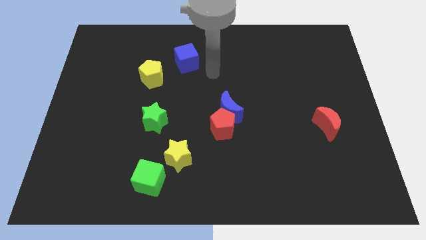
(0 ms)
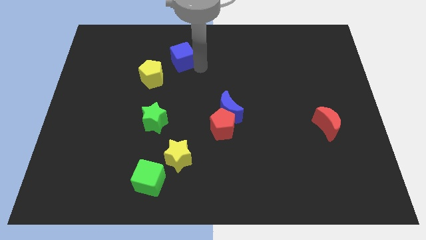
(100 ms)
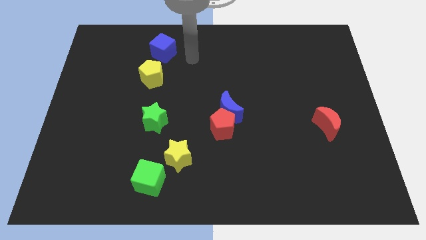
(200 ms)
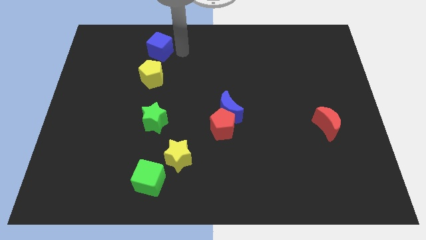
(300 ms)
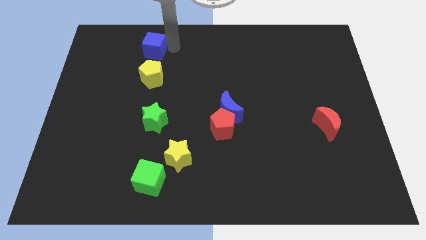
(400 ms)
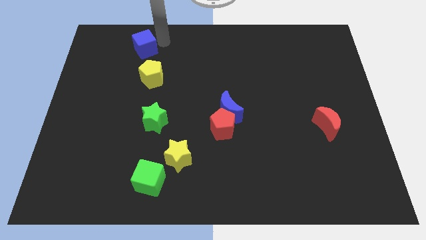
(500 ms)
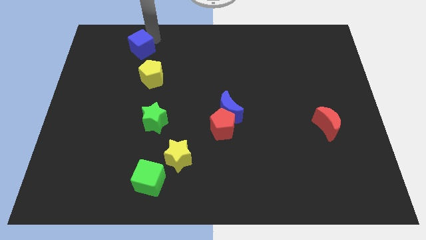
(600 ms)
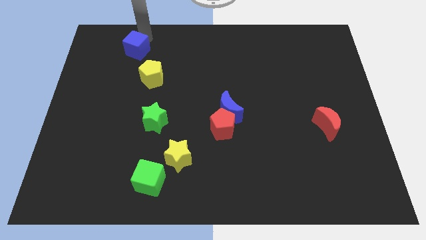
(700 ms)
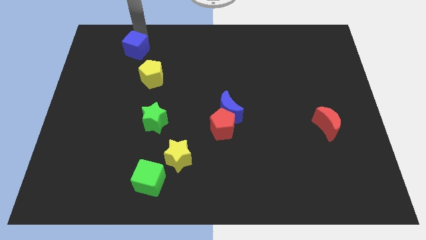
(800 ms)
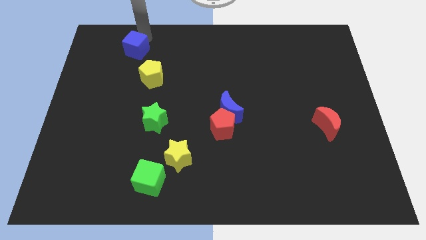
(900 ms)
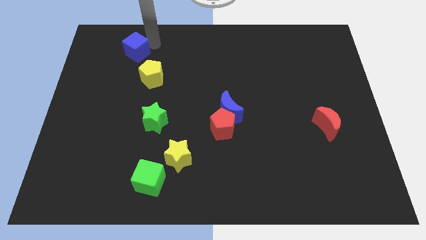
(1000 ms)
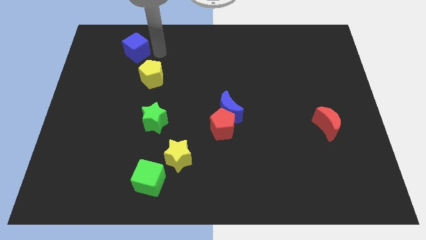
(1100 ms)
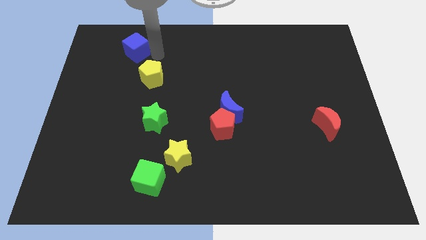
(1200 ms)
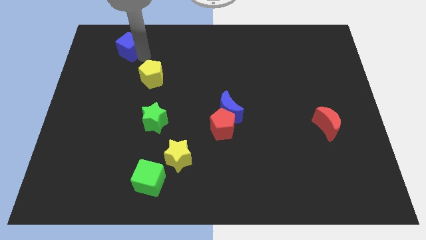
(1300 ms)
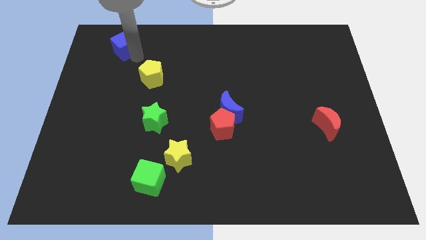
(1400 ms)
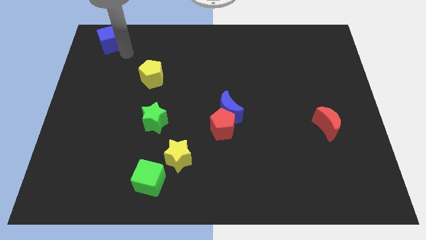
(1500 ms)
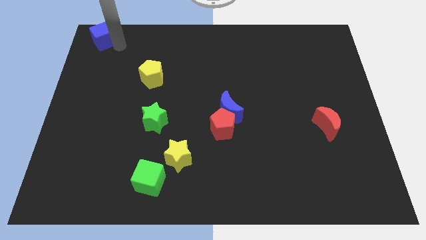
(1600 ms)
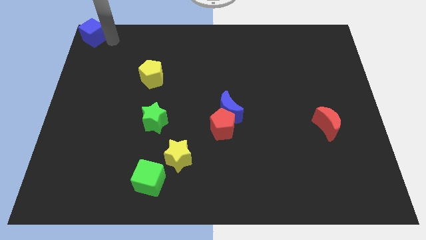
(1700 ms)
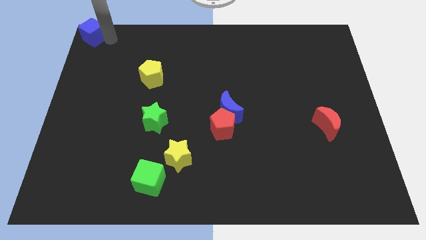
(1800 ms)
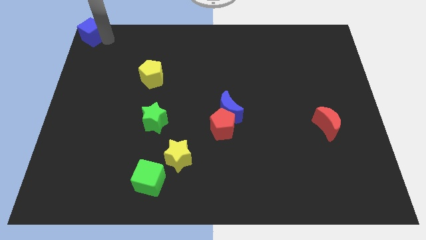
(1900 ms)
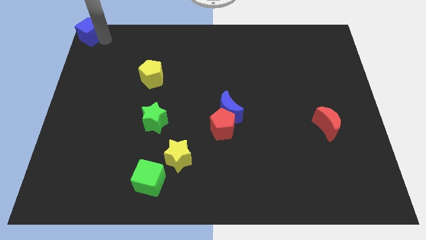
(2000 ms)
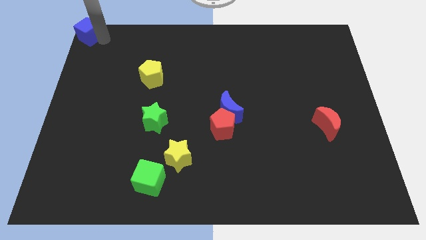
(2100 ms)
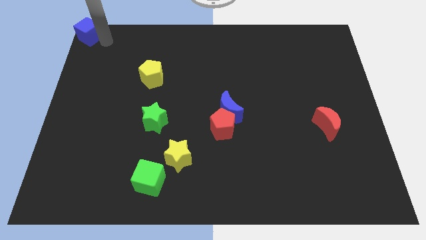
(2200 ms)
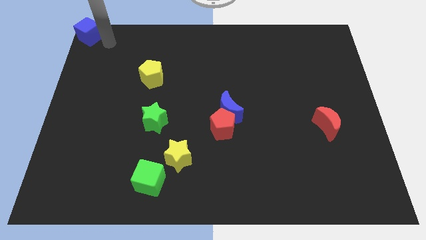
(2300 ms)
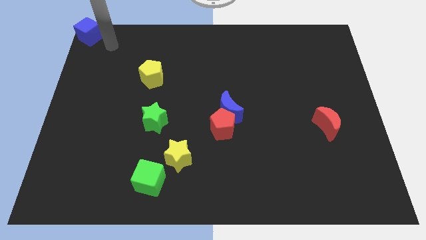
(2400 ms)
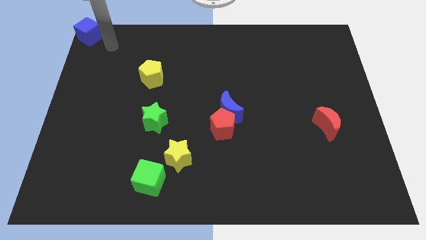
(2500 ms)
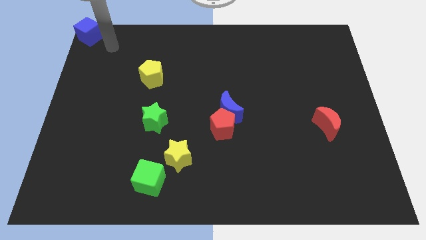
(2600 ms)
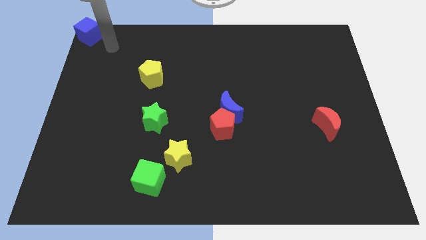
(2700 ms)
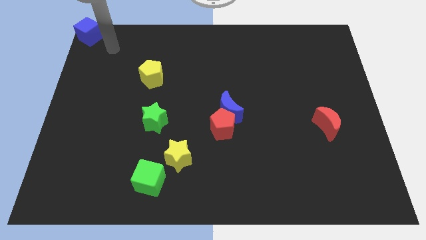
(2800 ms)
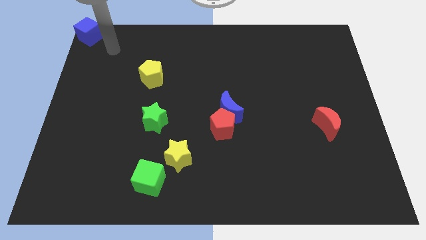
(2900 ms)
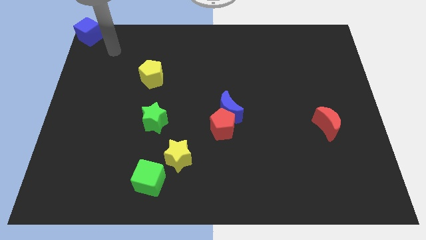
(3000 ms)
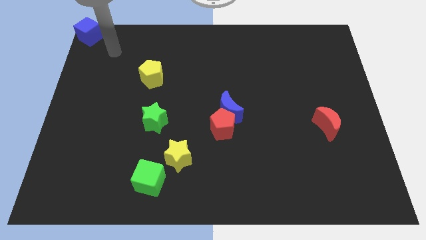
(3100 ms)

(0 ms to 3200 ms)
move the blue cube towards the left top corner

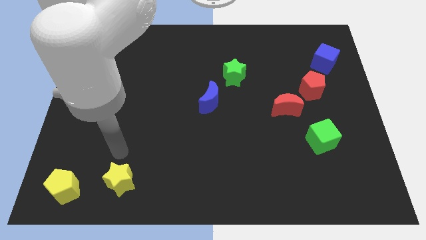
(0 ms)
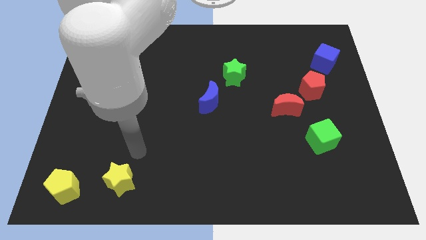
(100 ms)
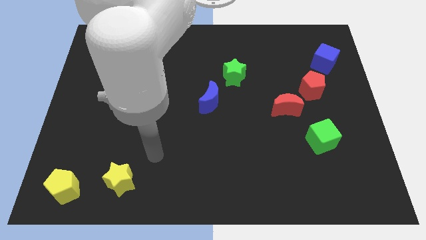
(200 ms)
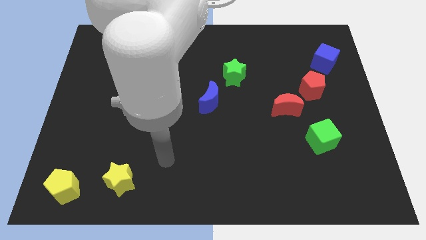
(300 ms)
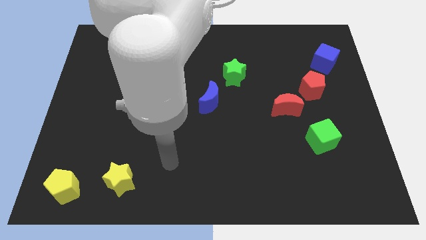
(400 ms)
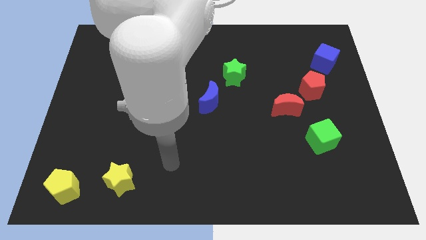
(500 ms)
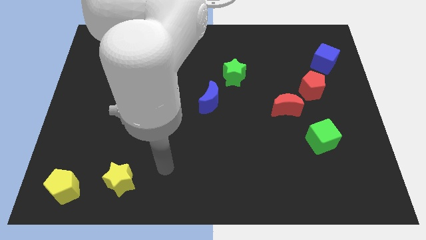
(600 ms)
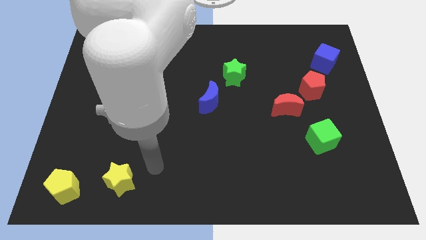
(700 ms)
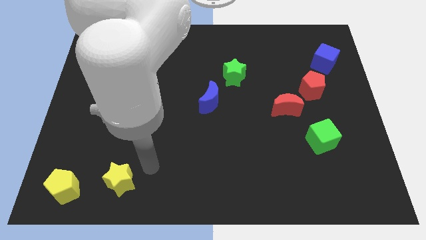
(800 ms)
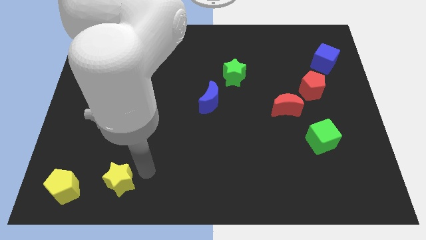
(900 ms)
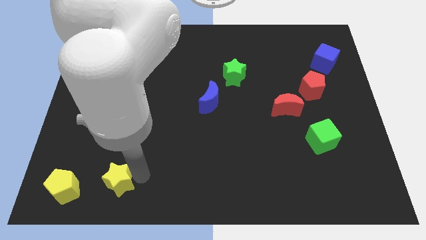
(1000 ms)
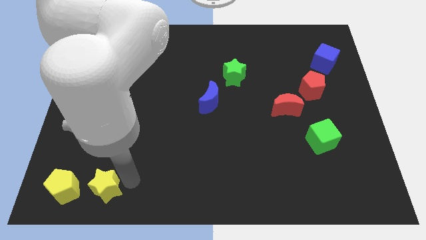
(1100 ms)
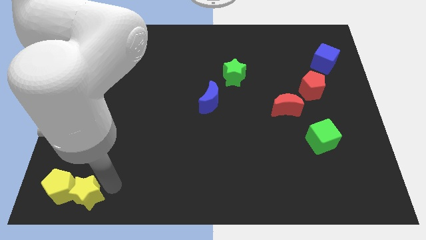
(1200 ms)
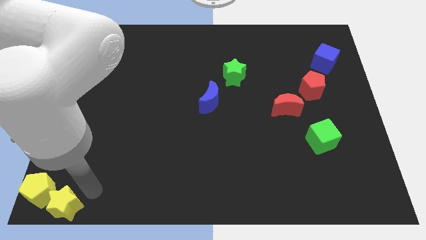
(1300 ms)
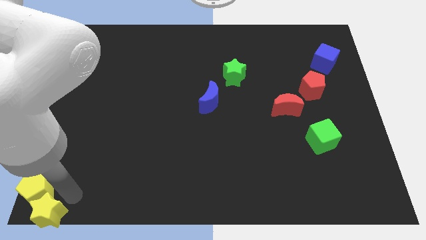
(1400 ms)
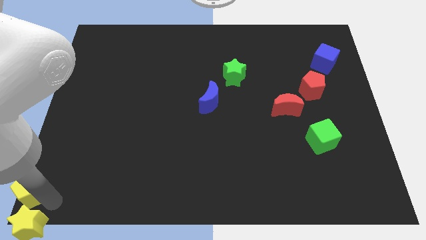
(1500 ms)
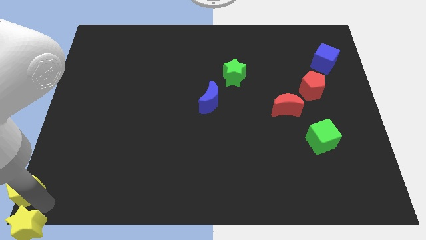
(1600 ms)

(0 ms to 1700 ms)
push the yellow star below the yellow pentagon

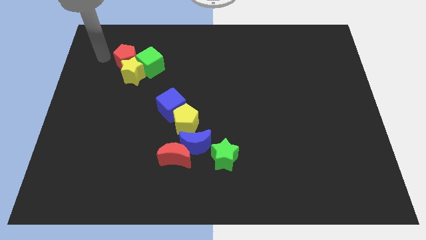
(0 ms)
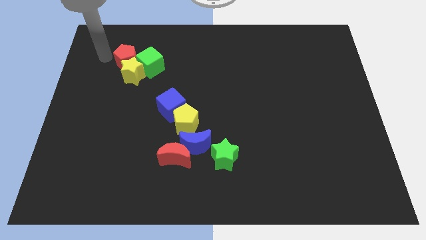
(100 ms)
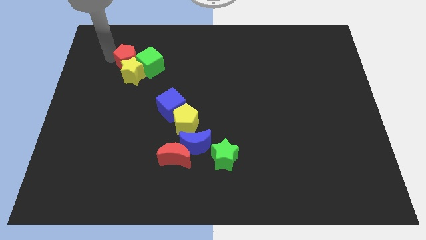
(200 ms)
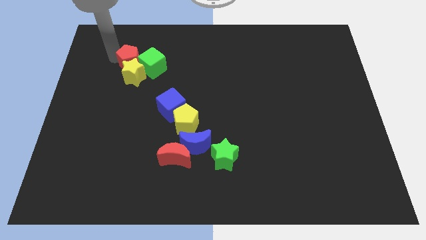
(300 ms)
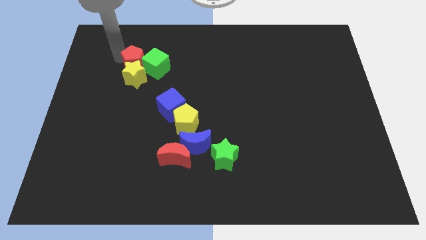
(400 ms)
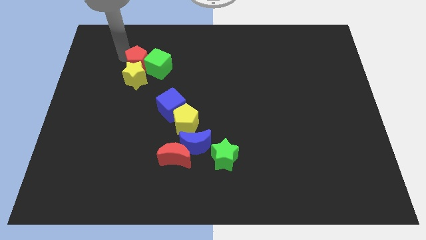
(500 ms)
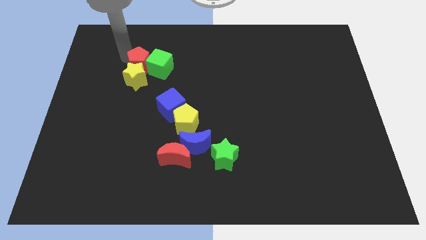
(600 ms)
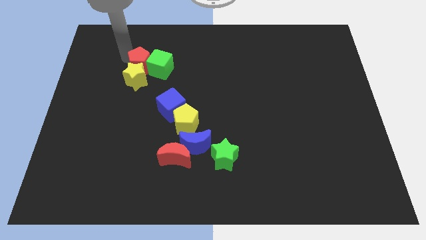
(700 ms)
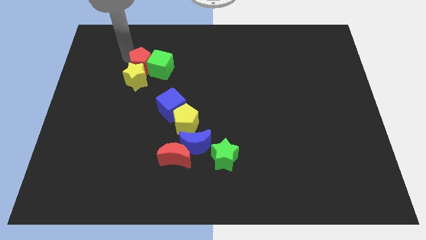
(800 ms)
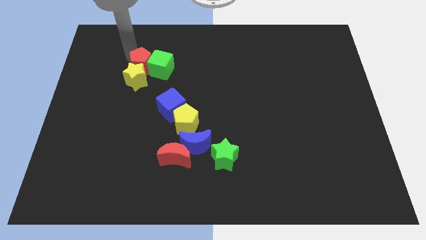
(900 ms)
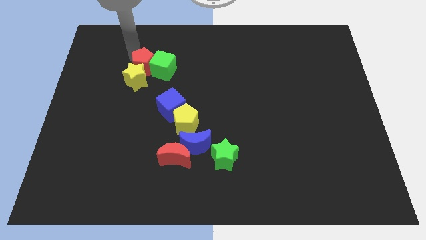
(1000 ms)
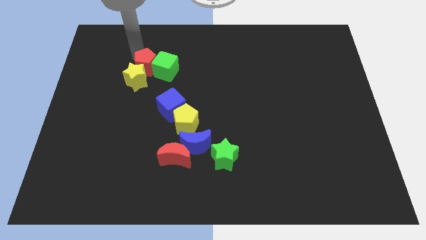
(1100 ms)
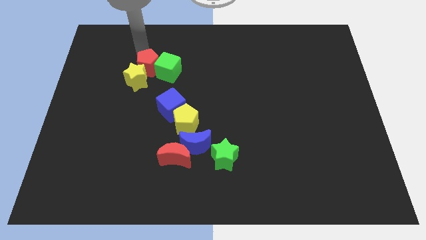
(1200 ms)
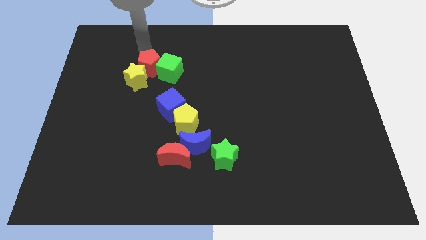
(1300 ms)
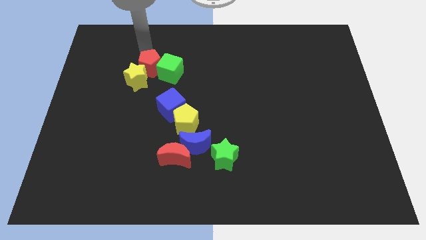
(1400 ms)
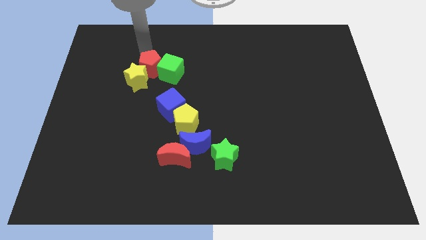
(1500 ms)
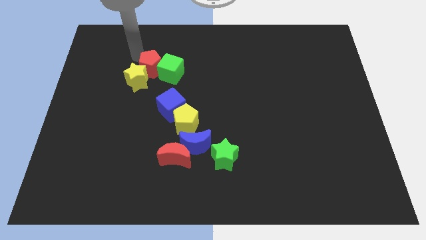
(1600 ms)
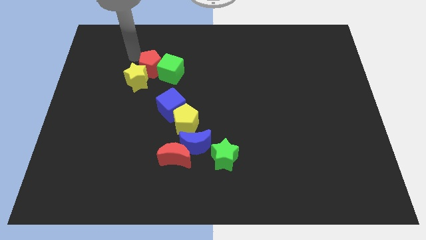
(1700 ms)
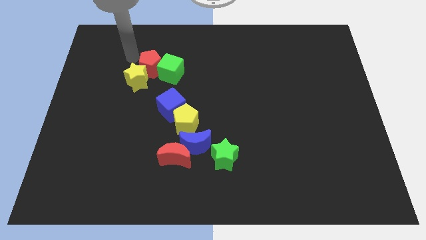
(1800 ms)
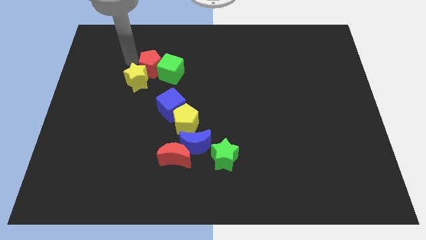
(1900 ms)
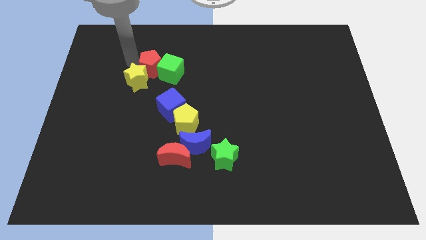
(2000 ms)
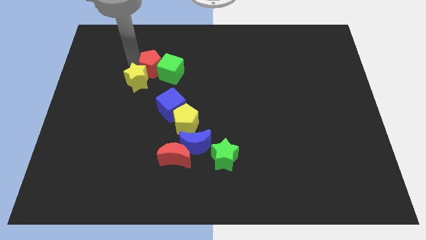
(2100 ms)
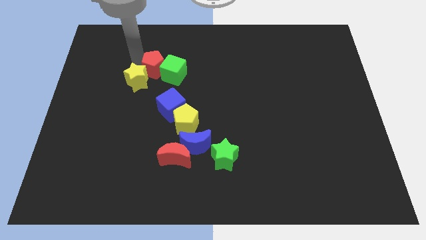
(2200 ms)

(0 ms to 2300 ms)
push the red pentagon and the green cube towards down

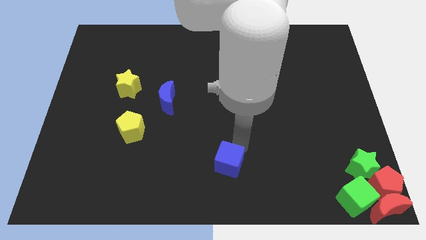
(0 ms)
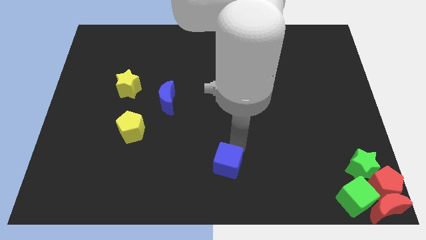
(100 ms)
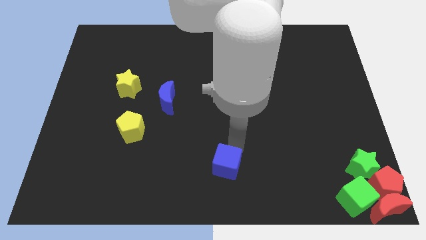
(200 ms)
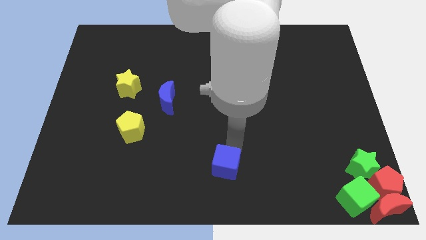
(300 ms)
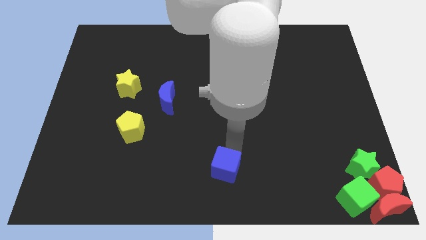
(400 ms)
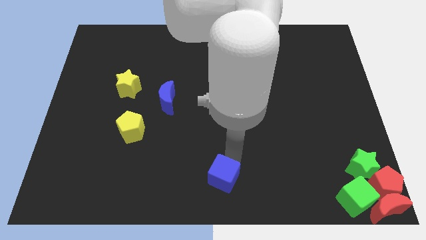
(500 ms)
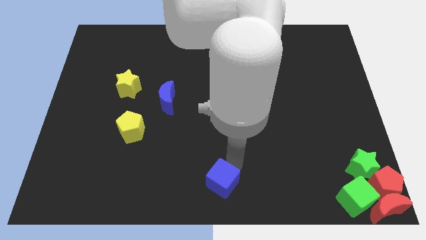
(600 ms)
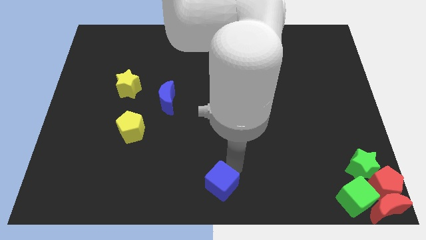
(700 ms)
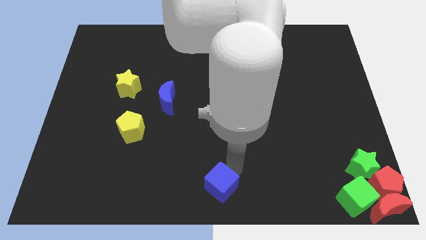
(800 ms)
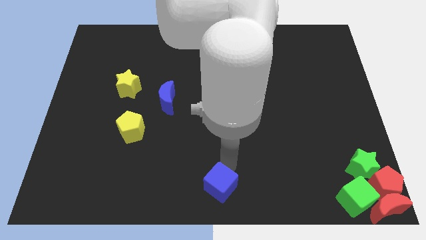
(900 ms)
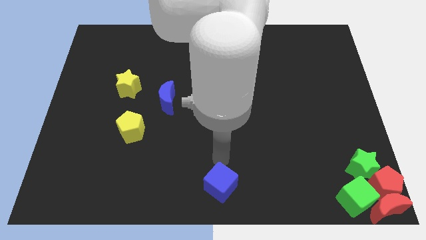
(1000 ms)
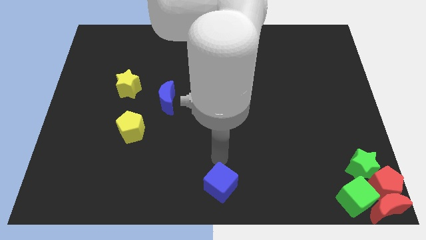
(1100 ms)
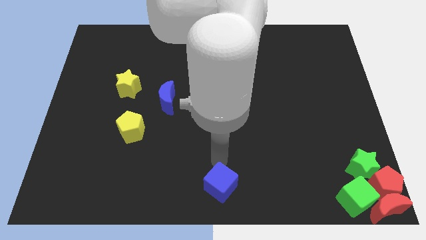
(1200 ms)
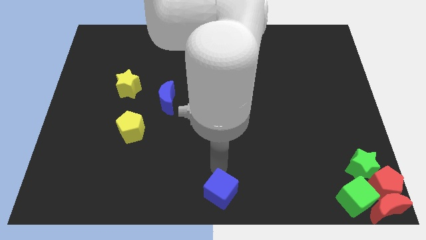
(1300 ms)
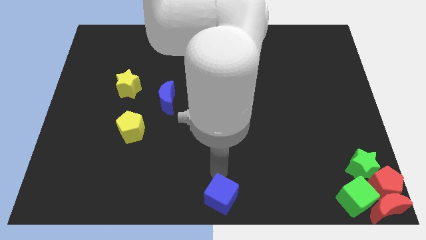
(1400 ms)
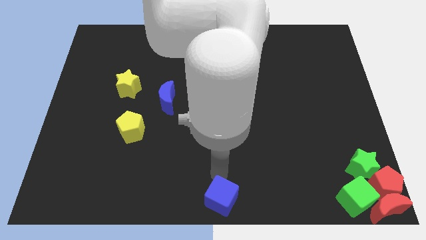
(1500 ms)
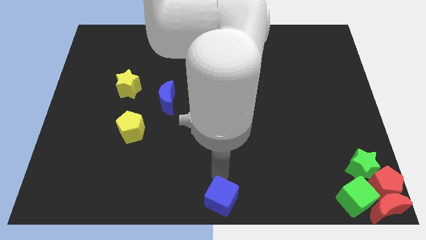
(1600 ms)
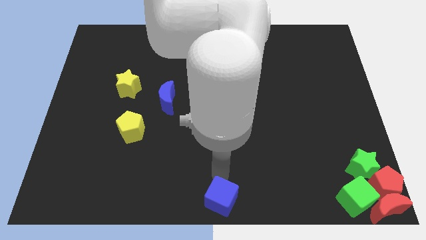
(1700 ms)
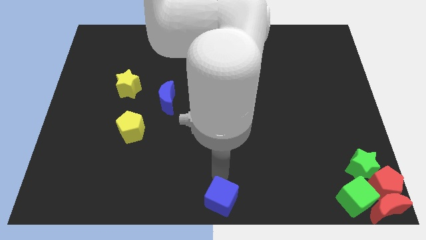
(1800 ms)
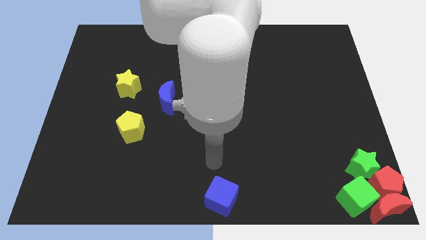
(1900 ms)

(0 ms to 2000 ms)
place the blue cube on the bottom centre of the board
